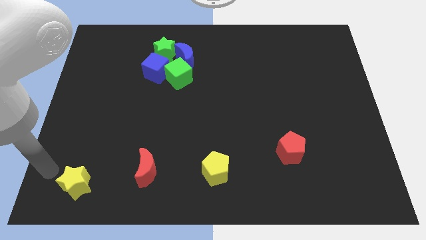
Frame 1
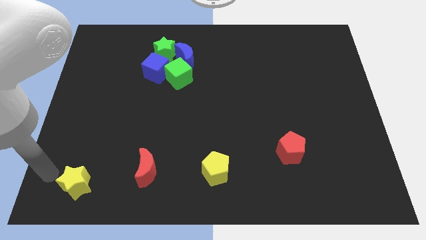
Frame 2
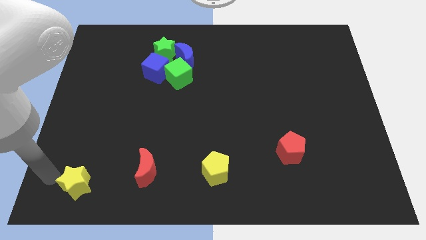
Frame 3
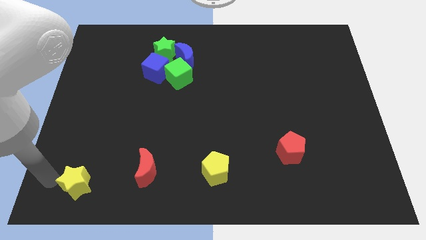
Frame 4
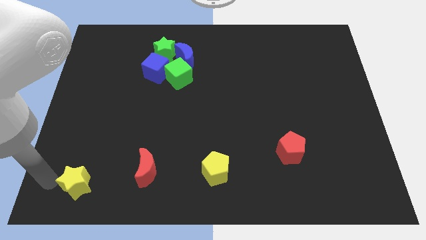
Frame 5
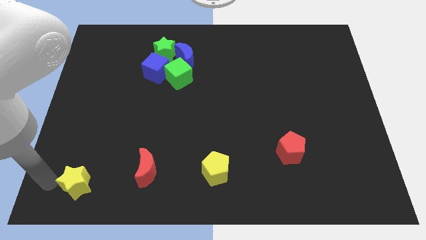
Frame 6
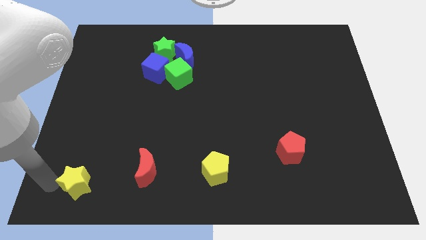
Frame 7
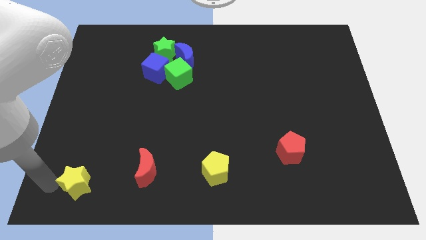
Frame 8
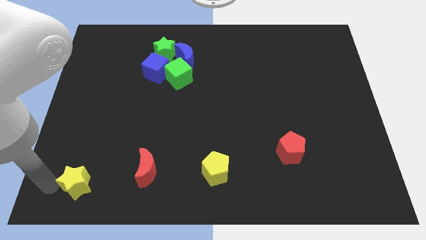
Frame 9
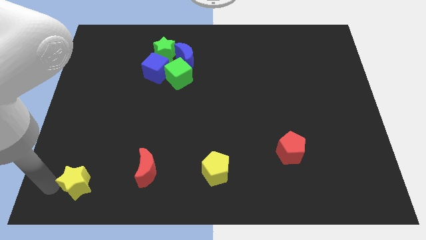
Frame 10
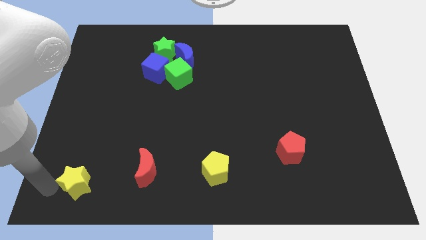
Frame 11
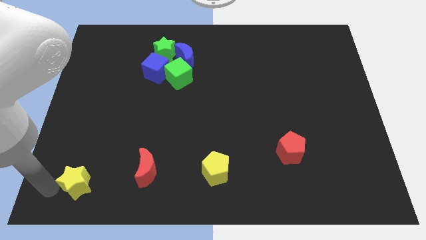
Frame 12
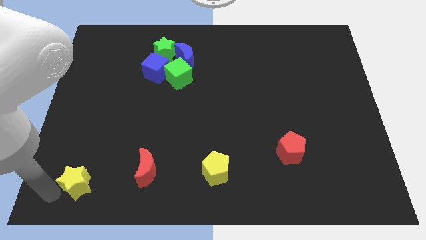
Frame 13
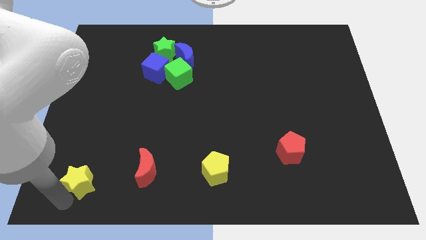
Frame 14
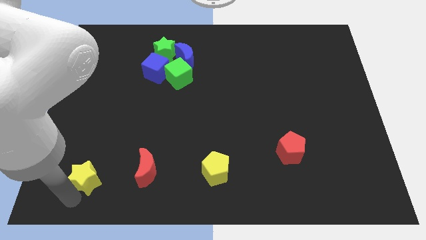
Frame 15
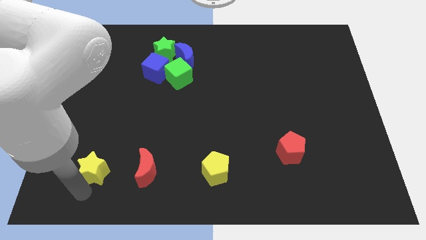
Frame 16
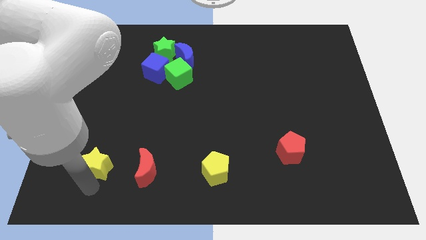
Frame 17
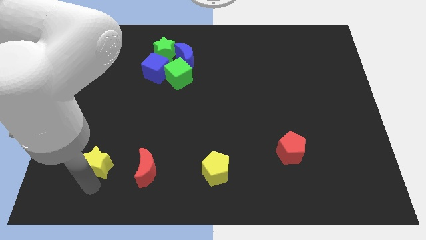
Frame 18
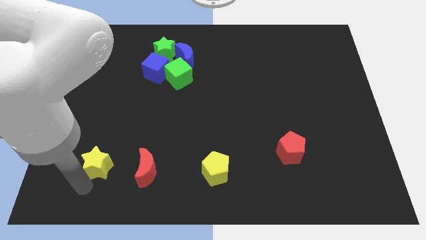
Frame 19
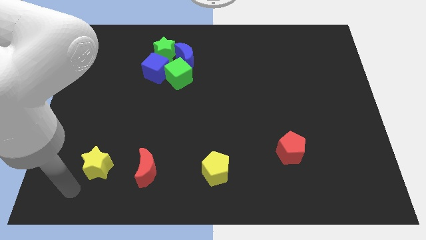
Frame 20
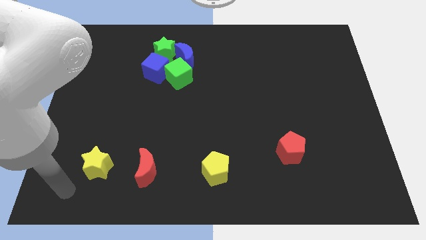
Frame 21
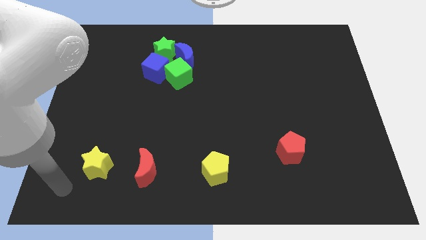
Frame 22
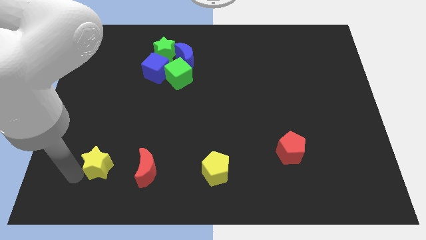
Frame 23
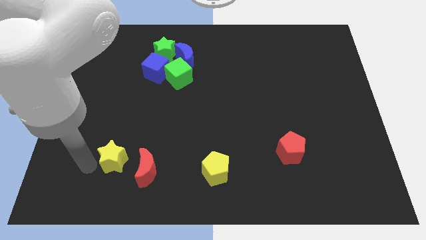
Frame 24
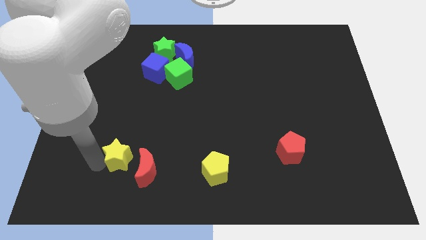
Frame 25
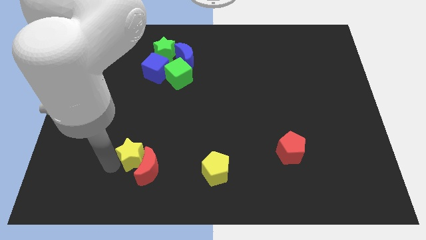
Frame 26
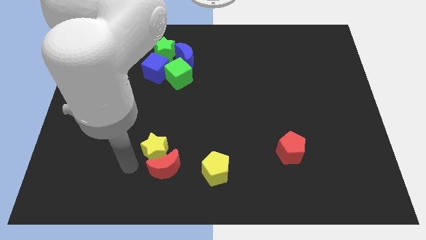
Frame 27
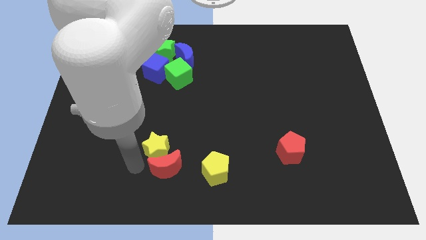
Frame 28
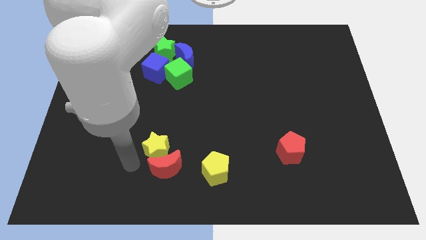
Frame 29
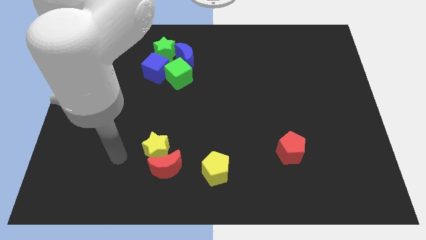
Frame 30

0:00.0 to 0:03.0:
push yellow star above red crescent

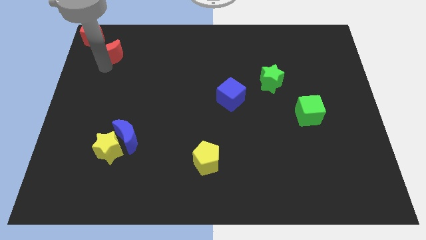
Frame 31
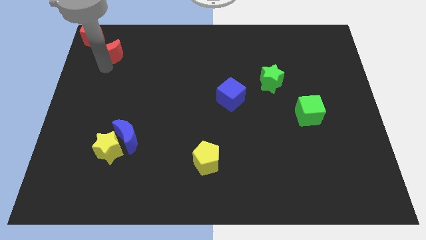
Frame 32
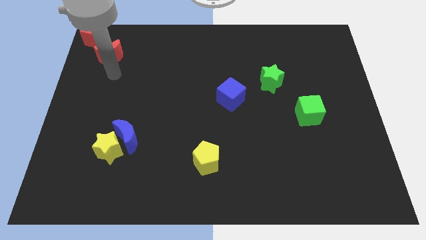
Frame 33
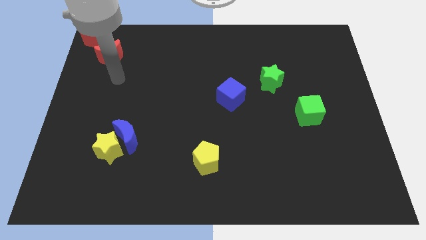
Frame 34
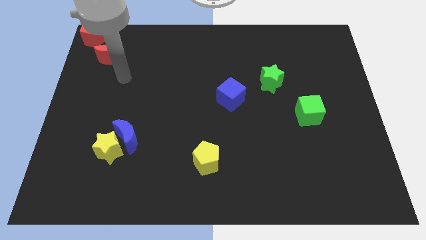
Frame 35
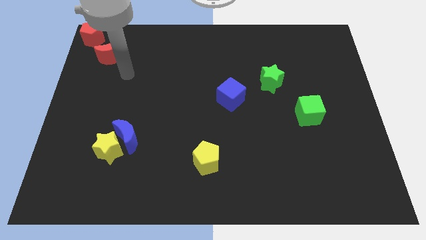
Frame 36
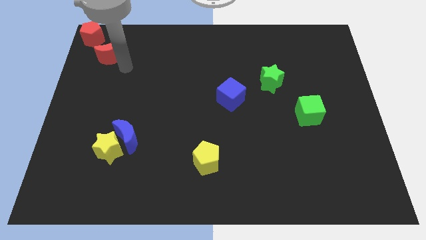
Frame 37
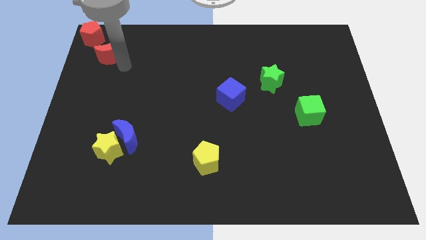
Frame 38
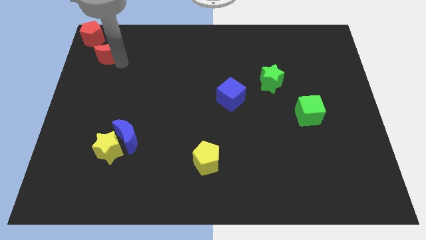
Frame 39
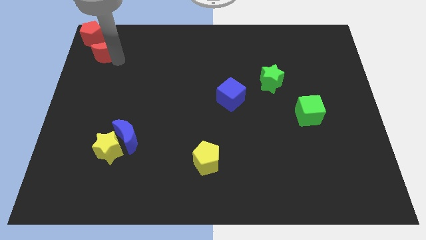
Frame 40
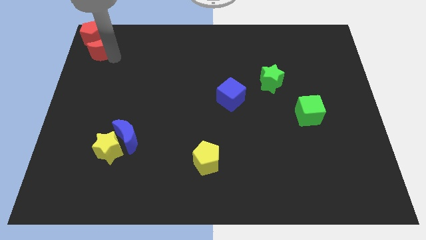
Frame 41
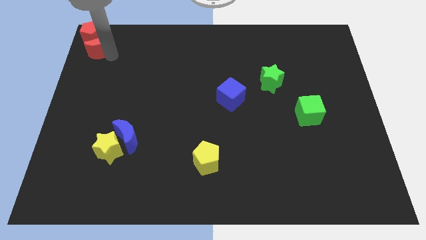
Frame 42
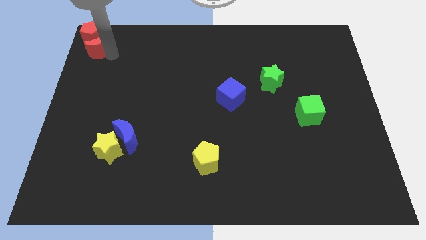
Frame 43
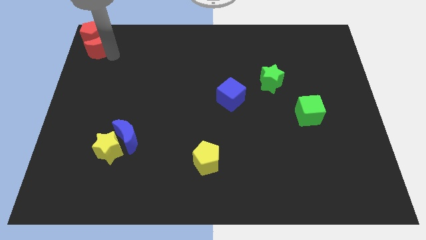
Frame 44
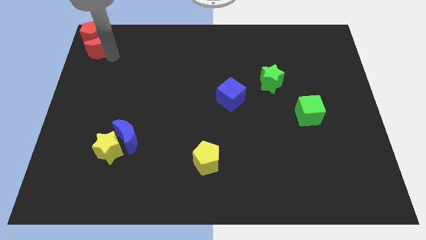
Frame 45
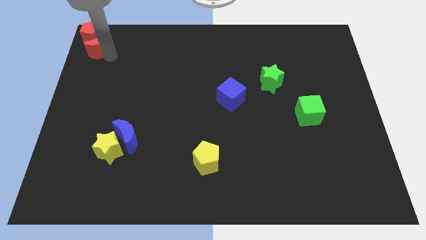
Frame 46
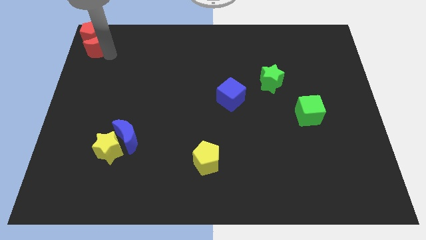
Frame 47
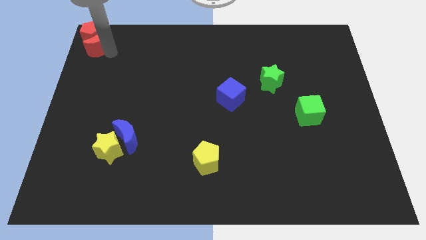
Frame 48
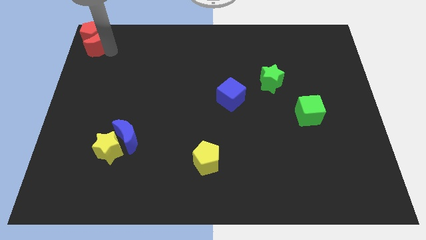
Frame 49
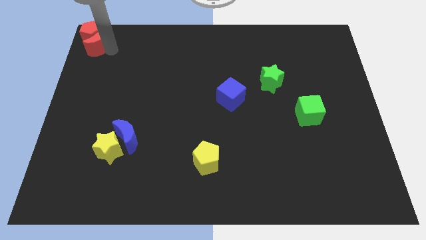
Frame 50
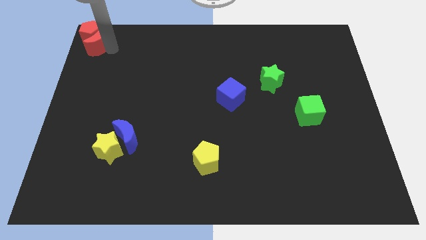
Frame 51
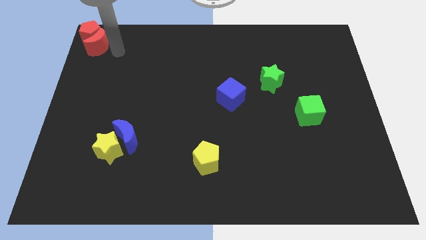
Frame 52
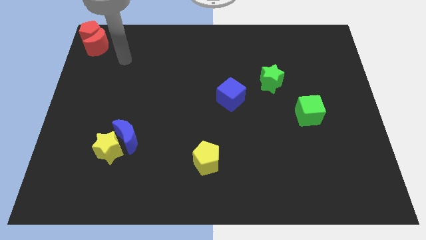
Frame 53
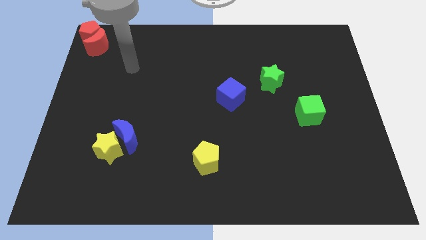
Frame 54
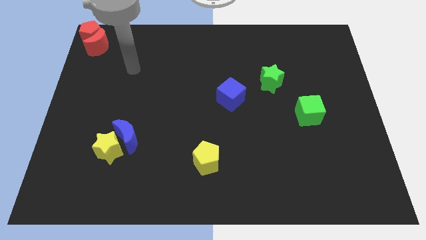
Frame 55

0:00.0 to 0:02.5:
push the red moon into red pentagon

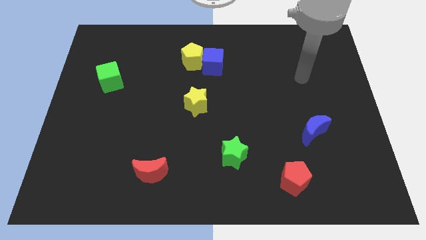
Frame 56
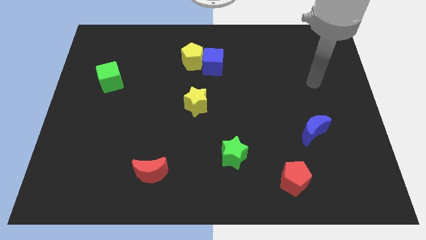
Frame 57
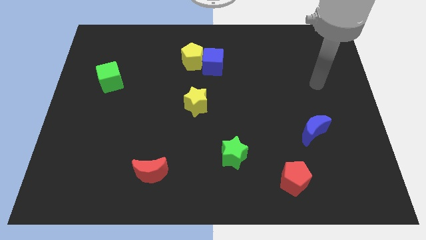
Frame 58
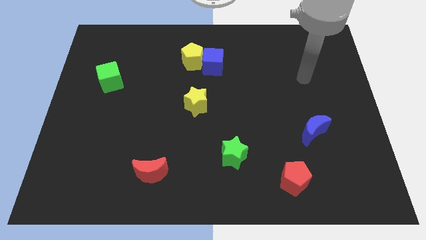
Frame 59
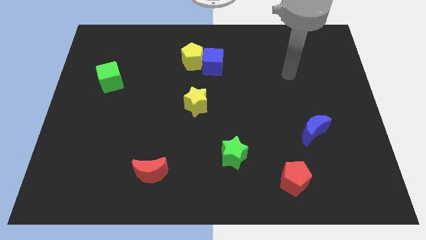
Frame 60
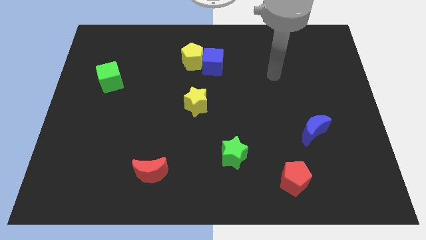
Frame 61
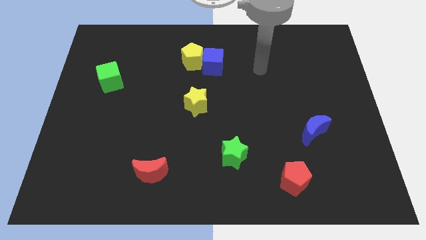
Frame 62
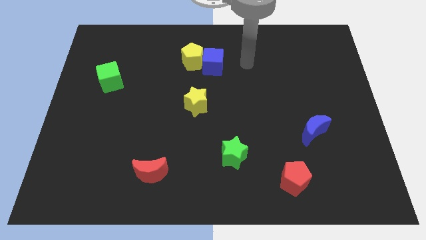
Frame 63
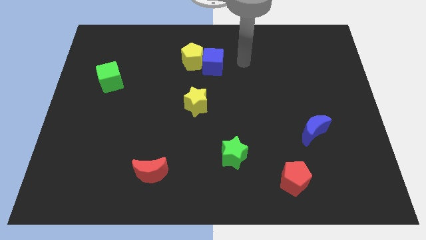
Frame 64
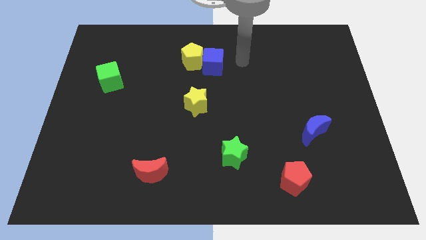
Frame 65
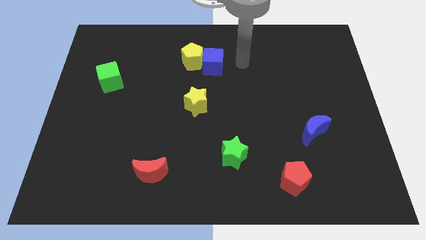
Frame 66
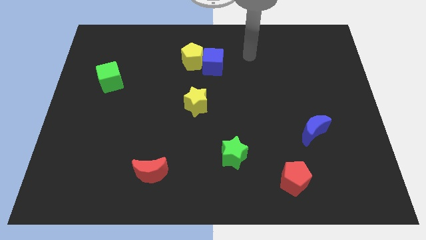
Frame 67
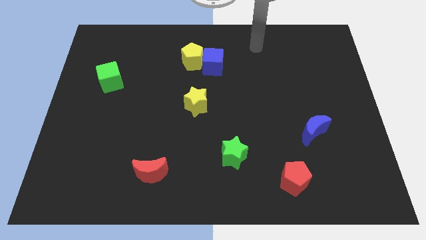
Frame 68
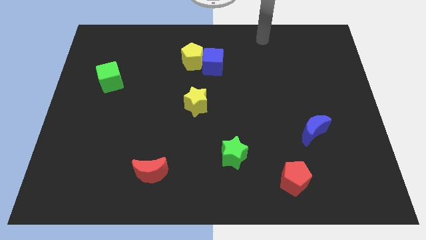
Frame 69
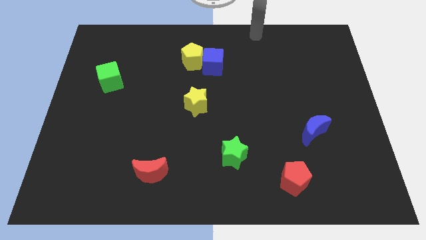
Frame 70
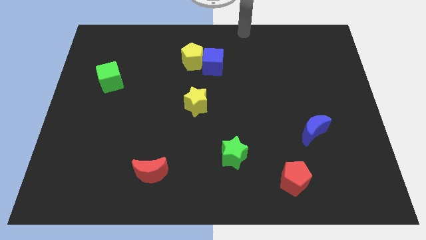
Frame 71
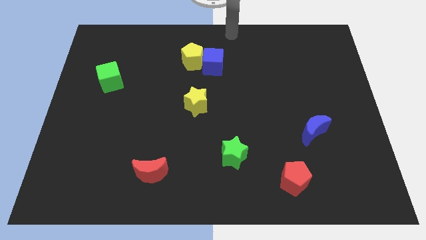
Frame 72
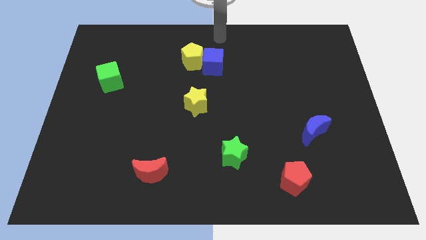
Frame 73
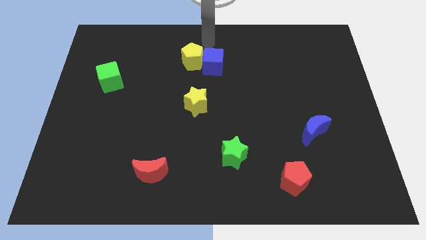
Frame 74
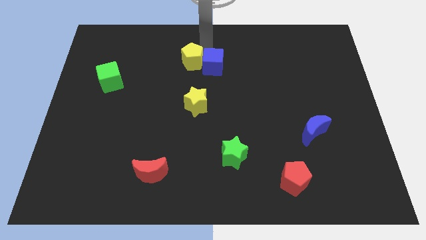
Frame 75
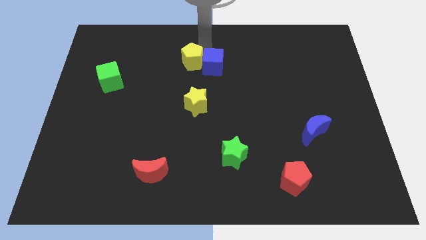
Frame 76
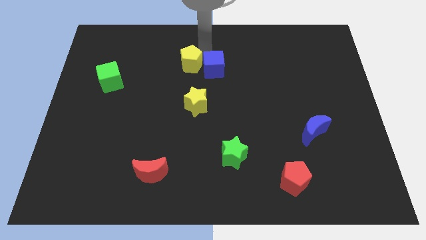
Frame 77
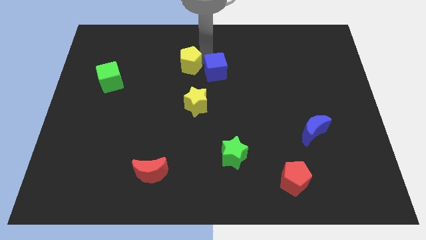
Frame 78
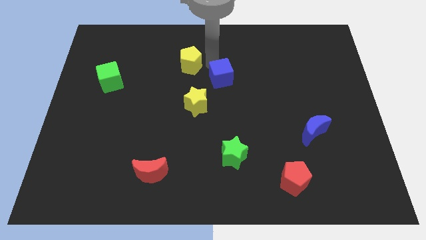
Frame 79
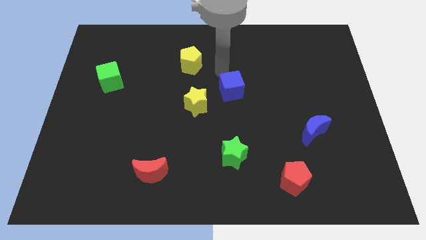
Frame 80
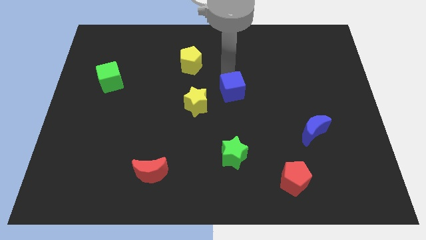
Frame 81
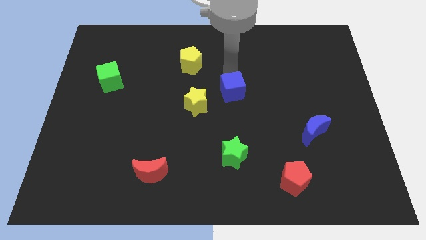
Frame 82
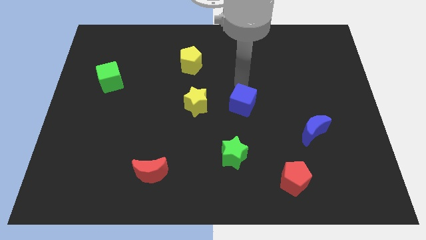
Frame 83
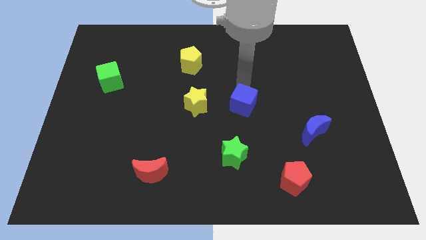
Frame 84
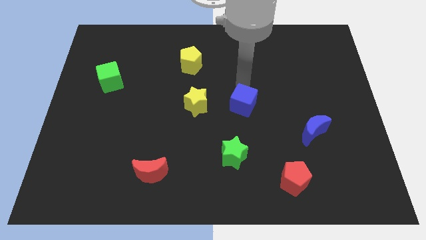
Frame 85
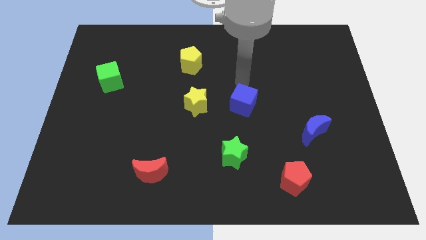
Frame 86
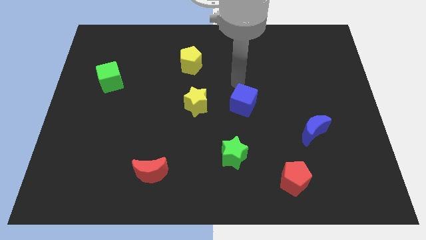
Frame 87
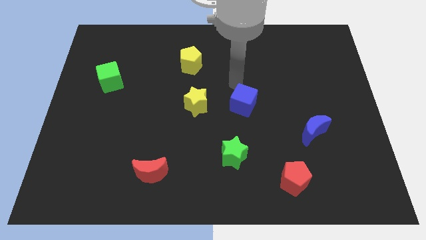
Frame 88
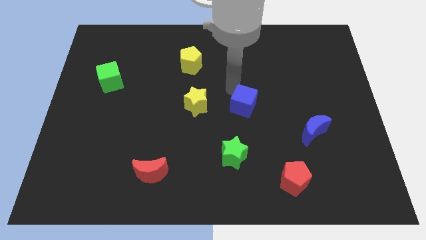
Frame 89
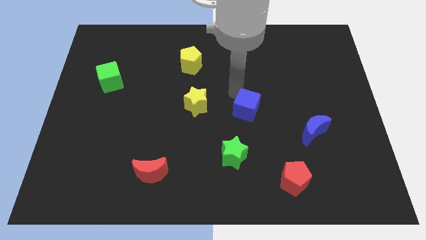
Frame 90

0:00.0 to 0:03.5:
place the blue cube to the right of the yellow star

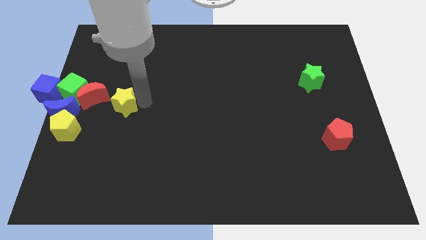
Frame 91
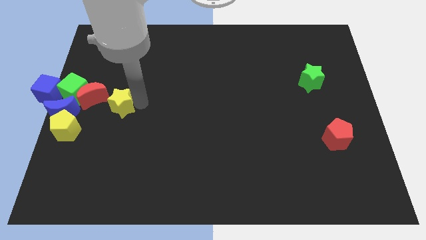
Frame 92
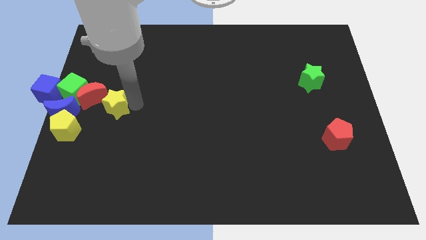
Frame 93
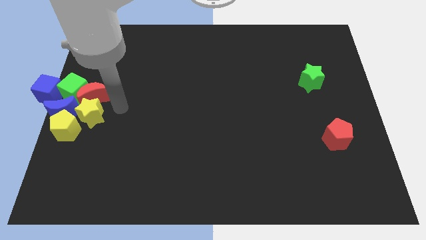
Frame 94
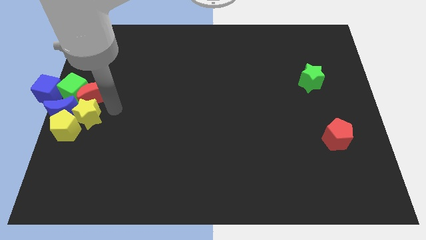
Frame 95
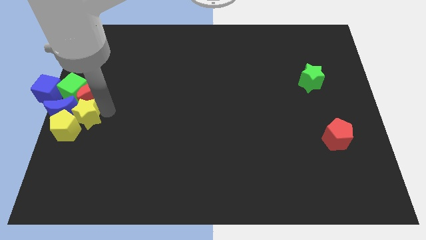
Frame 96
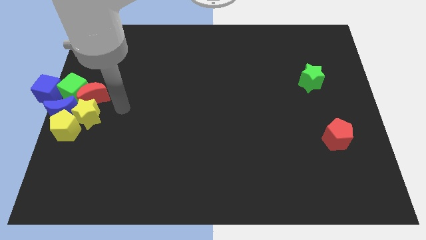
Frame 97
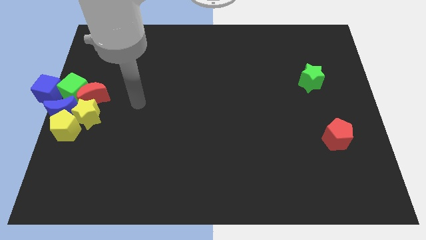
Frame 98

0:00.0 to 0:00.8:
push the yellow star beside the yellow right crescent
